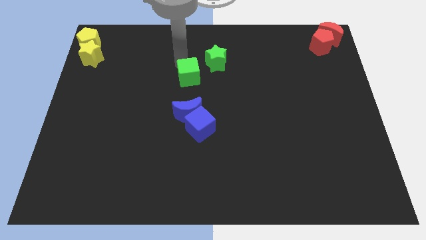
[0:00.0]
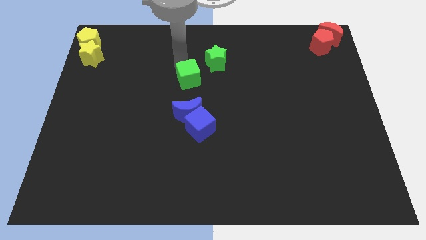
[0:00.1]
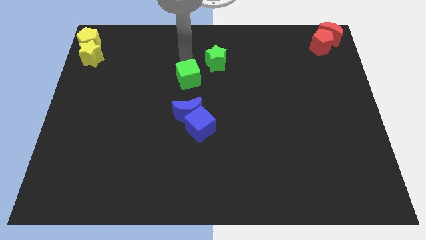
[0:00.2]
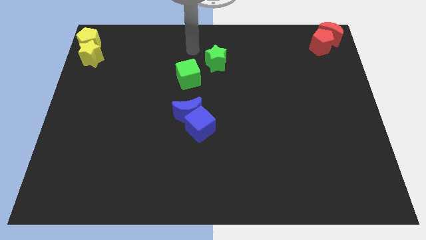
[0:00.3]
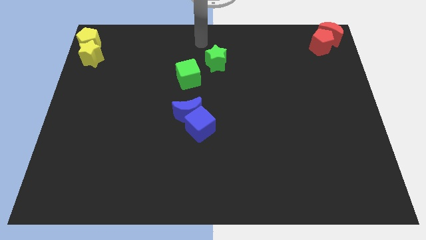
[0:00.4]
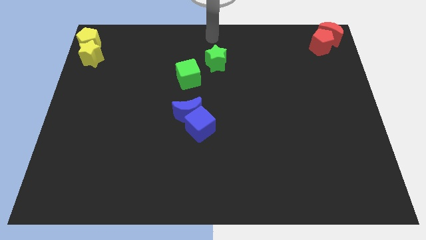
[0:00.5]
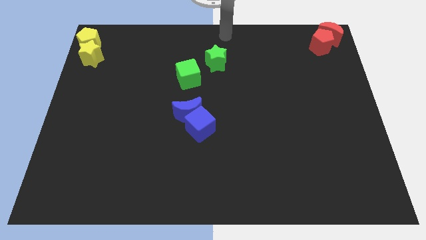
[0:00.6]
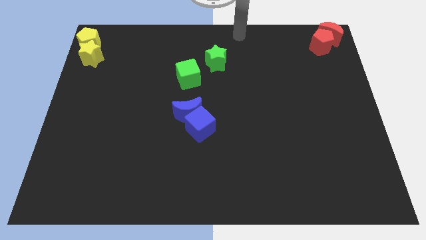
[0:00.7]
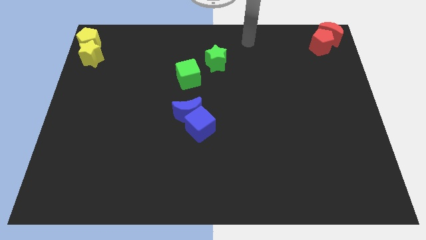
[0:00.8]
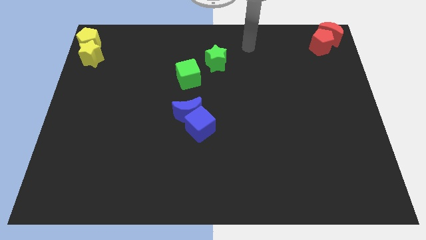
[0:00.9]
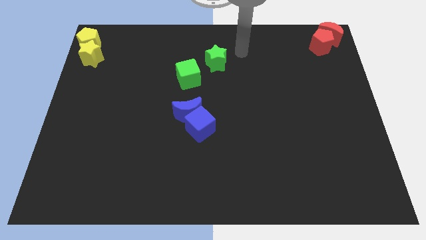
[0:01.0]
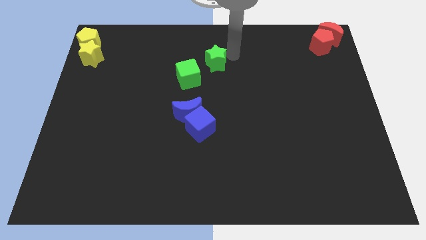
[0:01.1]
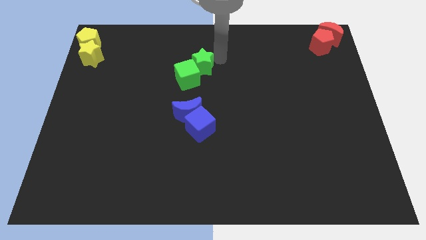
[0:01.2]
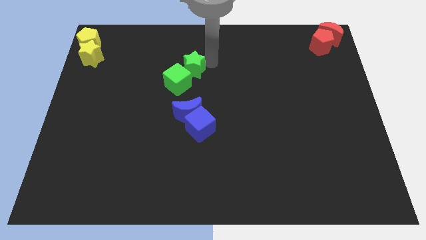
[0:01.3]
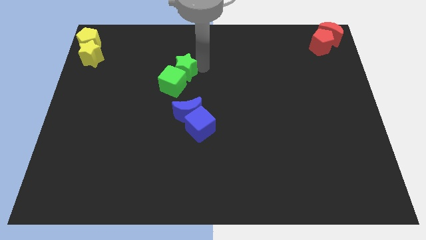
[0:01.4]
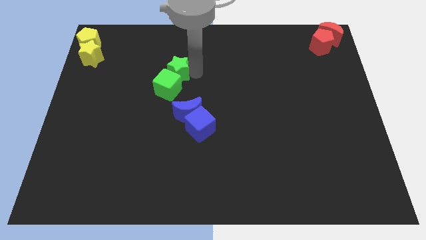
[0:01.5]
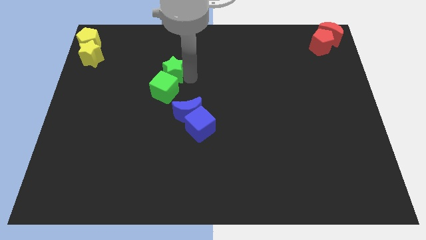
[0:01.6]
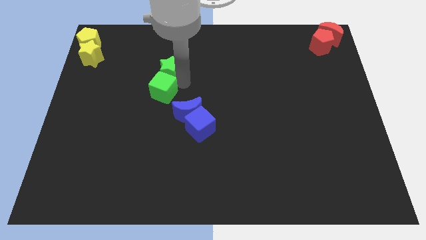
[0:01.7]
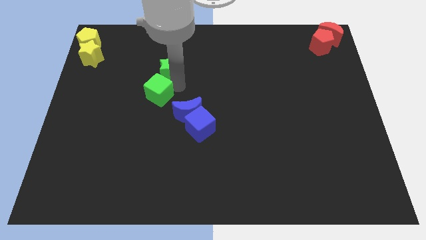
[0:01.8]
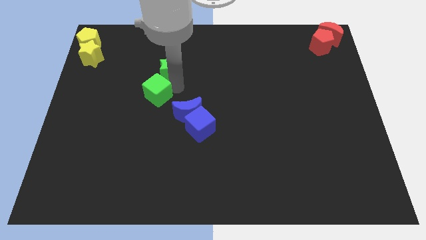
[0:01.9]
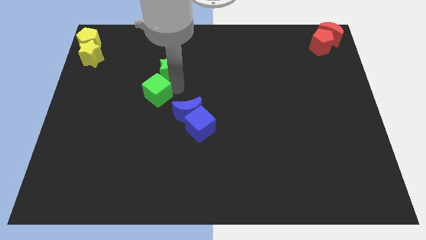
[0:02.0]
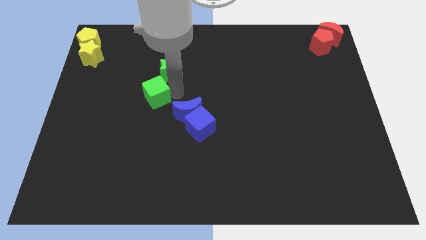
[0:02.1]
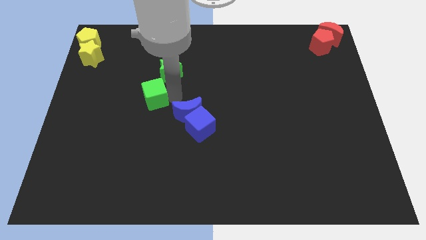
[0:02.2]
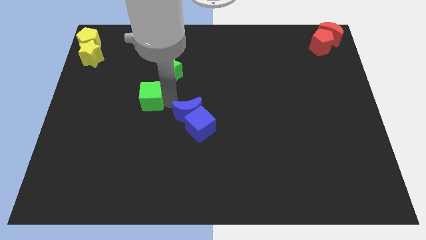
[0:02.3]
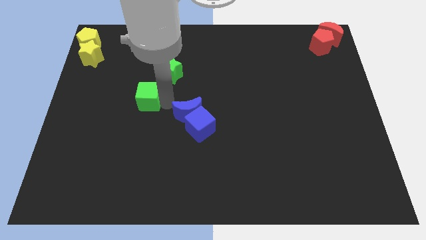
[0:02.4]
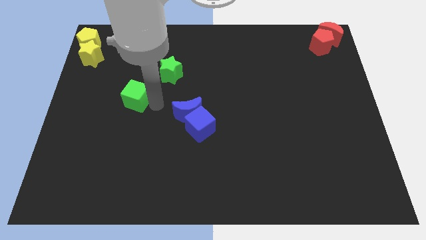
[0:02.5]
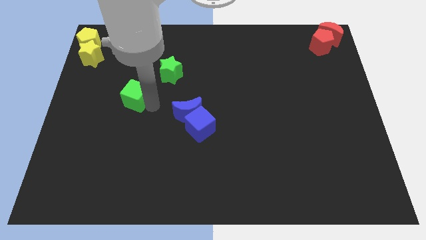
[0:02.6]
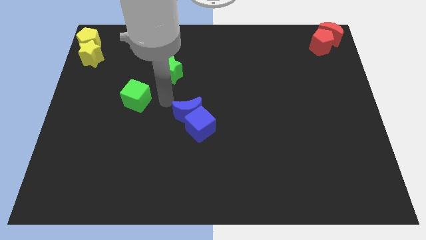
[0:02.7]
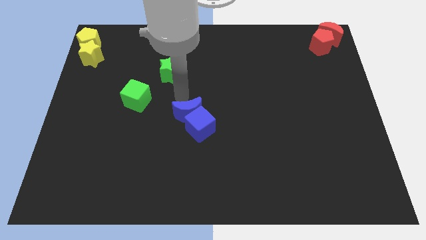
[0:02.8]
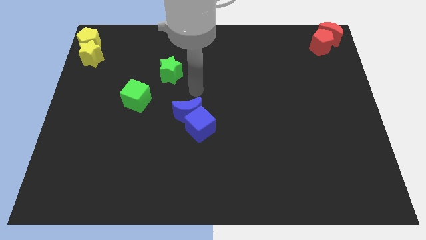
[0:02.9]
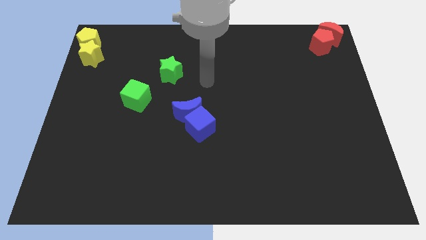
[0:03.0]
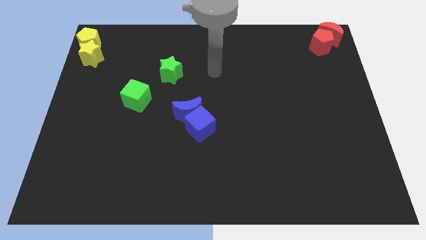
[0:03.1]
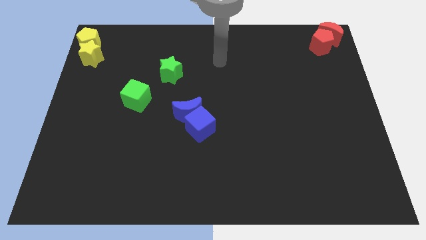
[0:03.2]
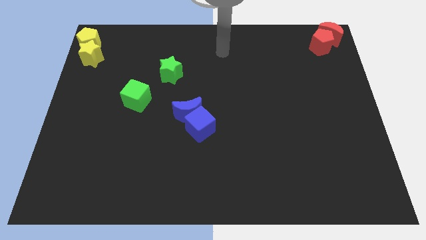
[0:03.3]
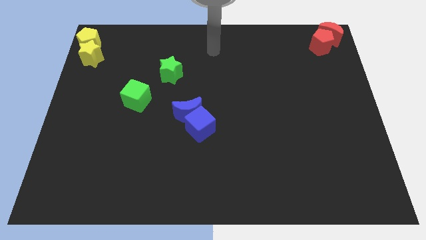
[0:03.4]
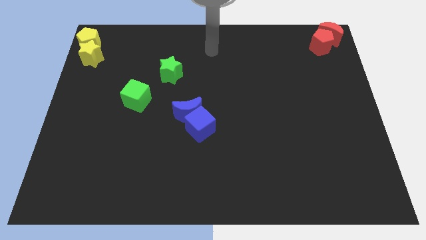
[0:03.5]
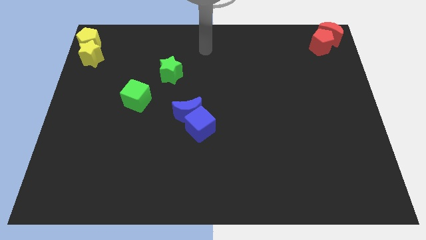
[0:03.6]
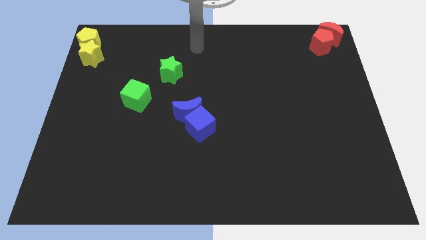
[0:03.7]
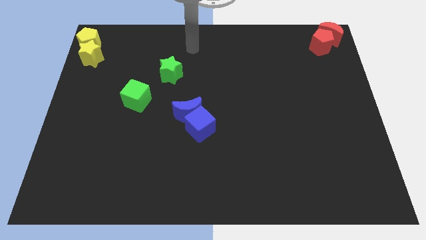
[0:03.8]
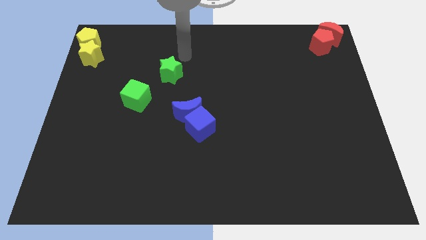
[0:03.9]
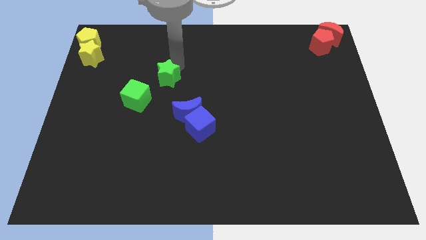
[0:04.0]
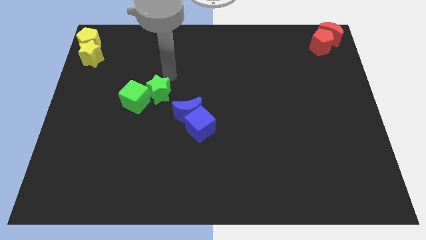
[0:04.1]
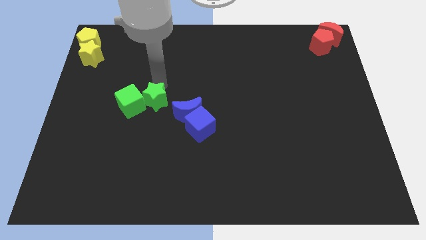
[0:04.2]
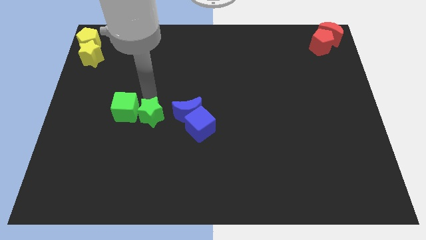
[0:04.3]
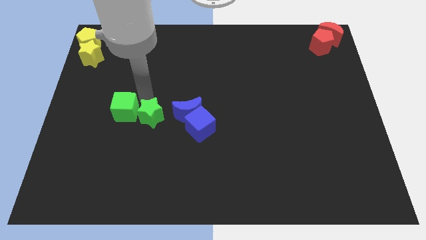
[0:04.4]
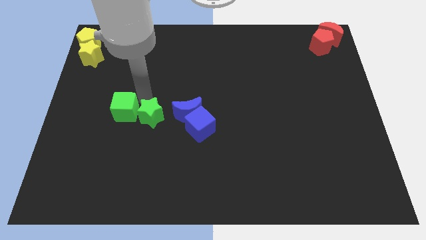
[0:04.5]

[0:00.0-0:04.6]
move the green blocks to the left of the blue crescent

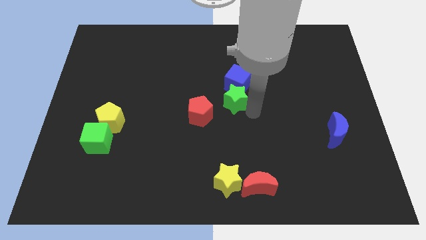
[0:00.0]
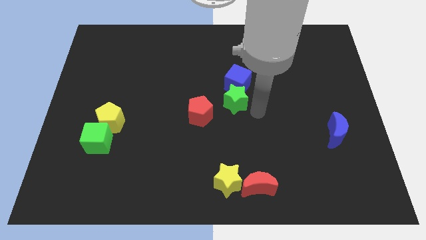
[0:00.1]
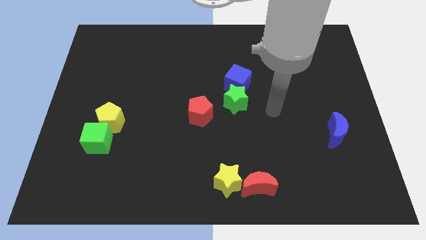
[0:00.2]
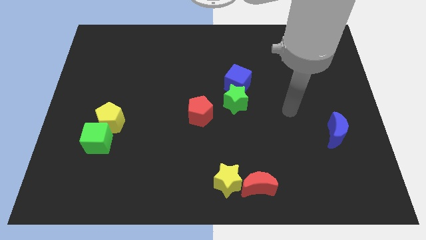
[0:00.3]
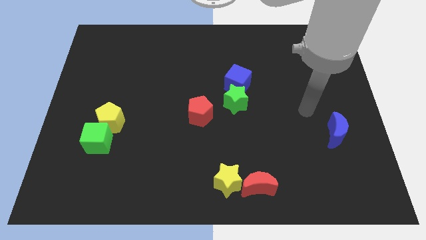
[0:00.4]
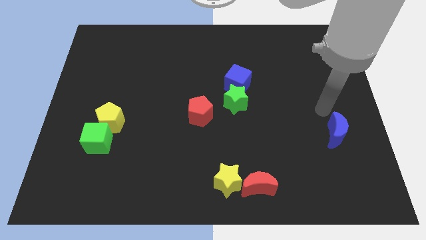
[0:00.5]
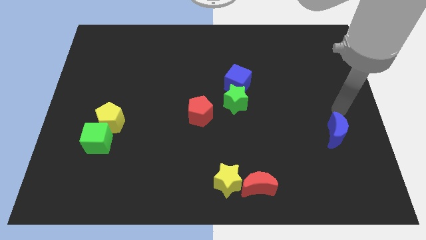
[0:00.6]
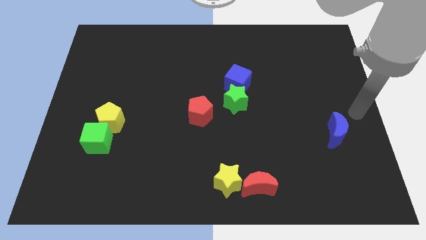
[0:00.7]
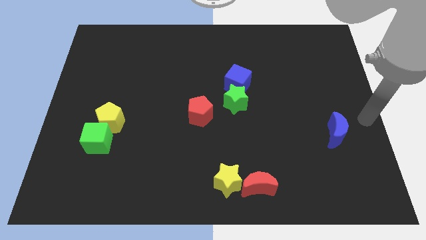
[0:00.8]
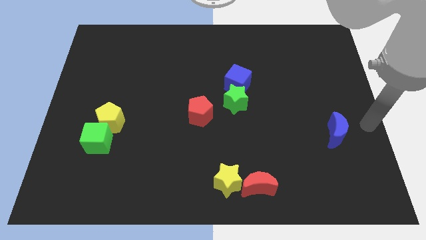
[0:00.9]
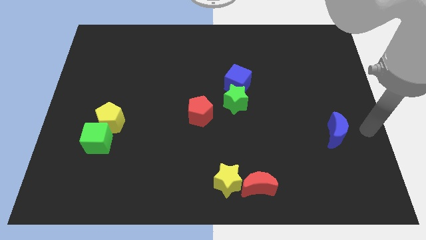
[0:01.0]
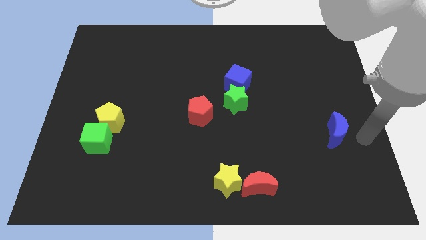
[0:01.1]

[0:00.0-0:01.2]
point your hand at the right of the blue crescent

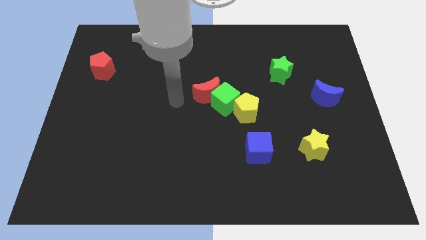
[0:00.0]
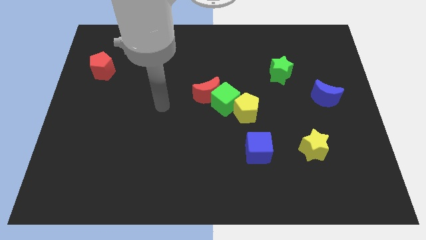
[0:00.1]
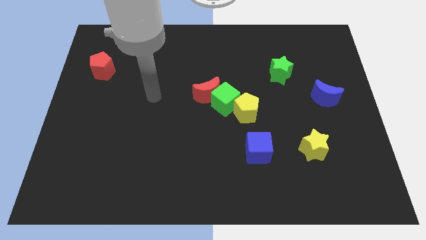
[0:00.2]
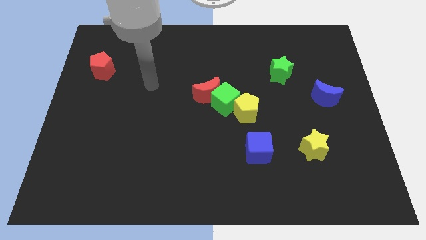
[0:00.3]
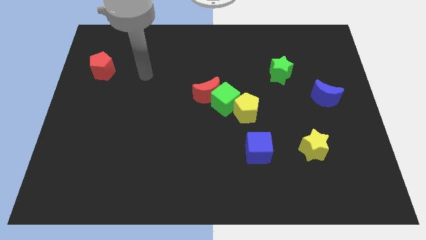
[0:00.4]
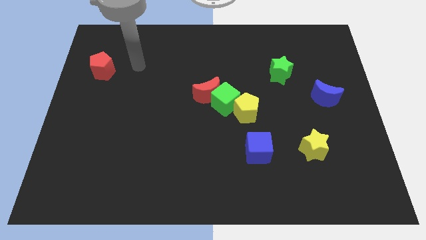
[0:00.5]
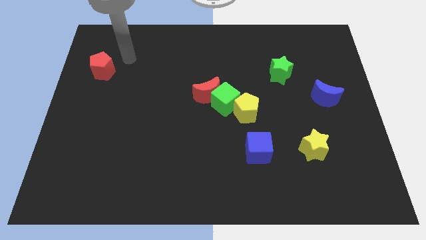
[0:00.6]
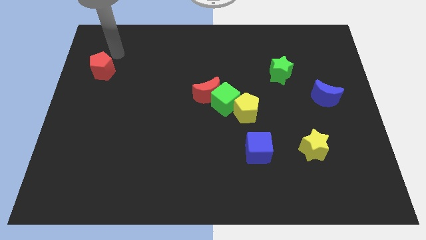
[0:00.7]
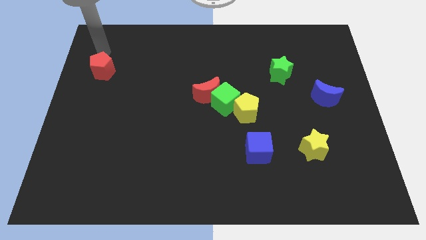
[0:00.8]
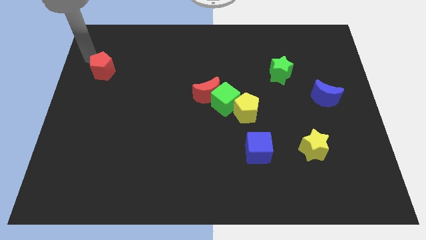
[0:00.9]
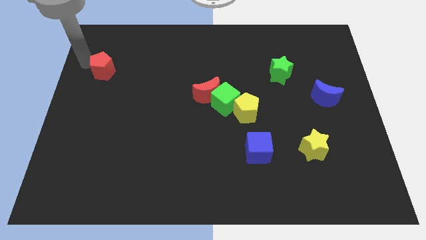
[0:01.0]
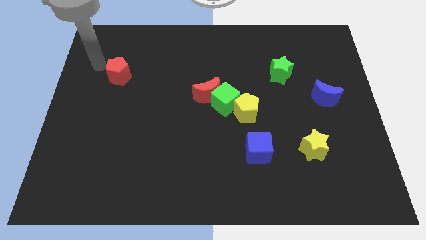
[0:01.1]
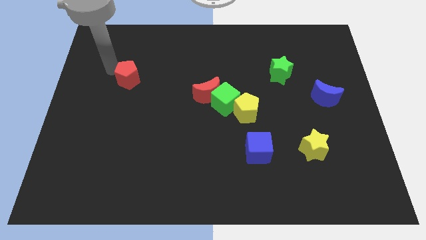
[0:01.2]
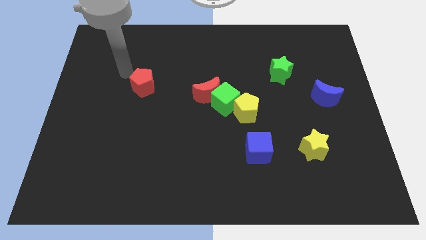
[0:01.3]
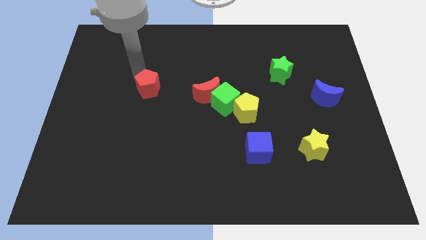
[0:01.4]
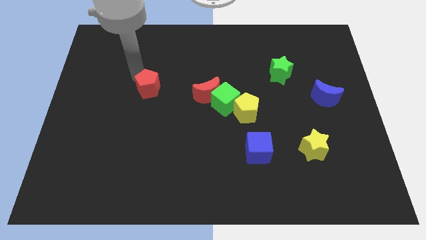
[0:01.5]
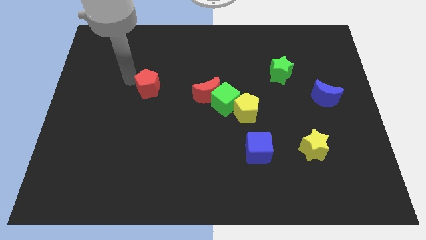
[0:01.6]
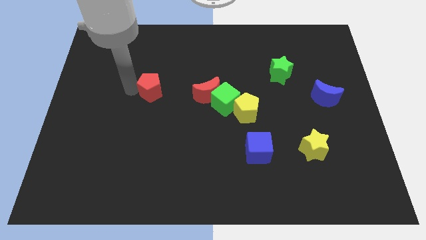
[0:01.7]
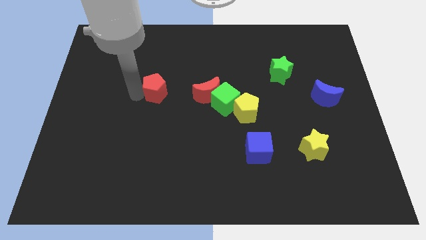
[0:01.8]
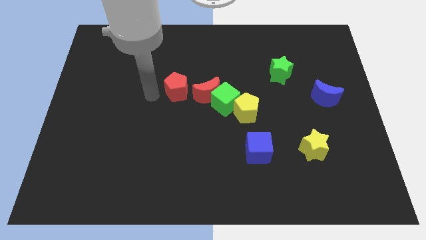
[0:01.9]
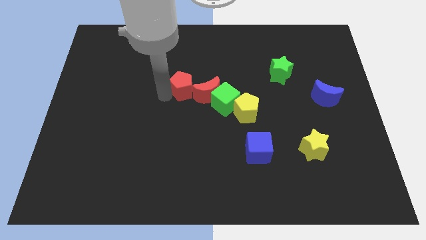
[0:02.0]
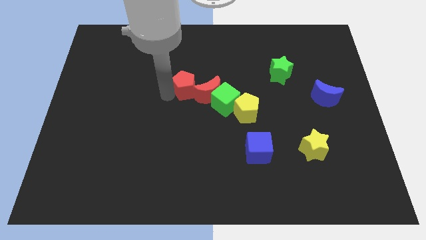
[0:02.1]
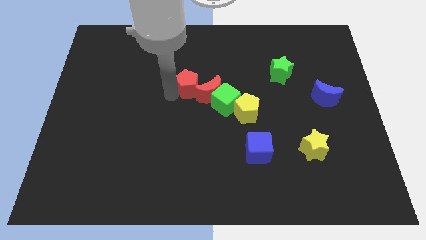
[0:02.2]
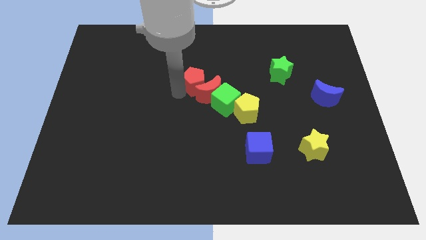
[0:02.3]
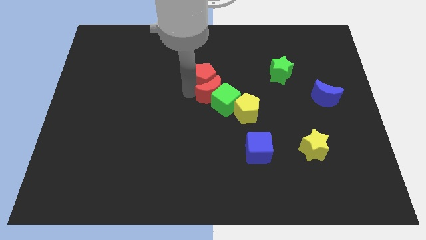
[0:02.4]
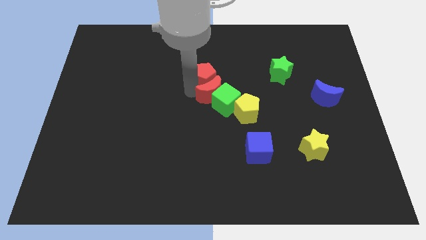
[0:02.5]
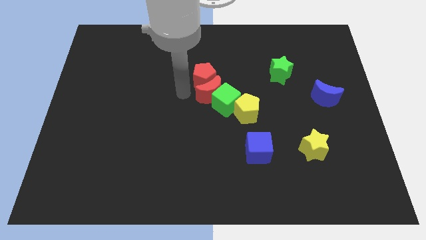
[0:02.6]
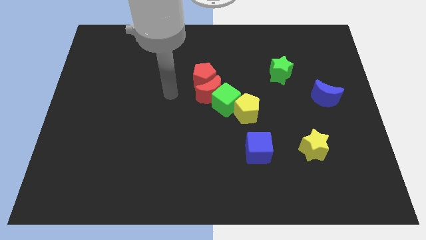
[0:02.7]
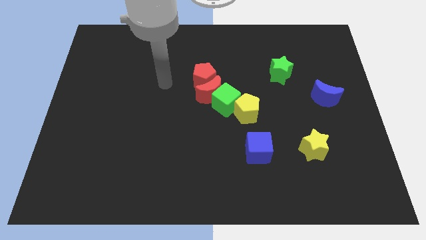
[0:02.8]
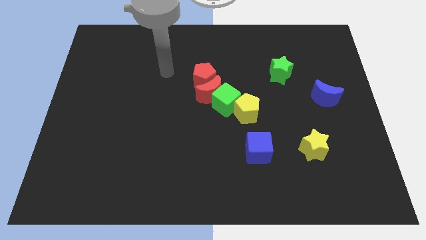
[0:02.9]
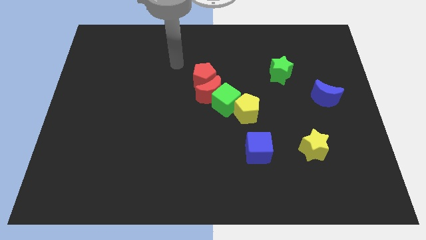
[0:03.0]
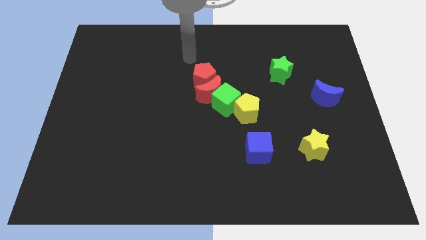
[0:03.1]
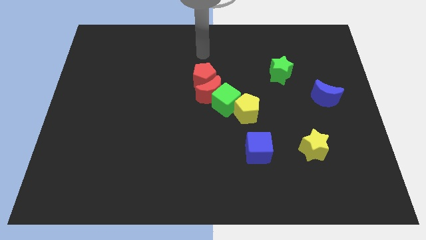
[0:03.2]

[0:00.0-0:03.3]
push the red pentagon at the top side of the red crescent

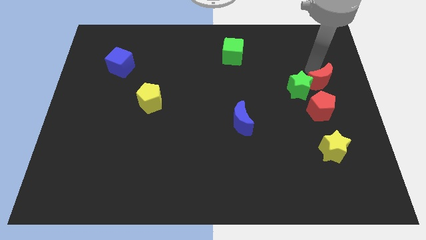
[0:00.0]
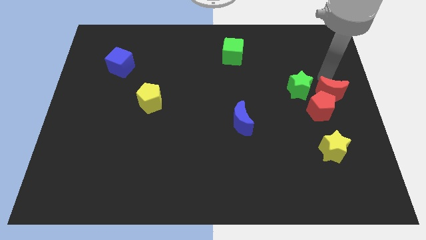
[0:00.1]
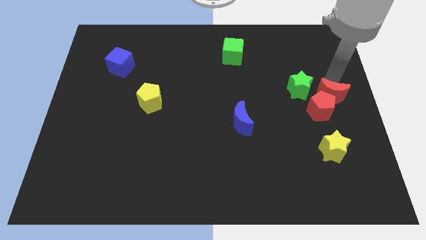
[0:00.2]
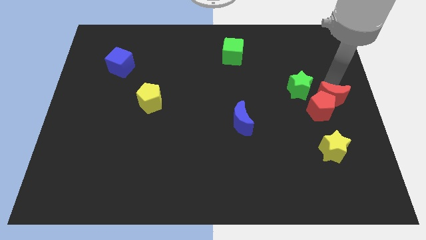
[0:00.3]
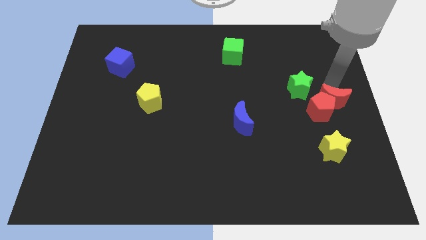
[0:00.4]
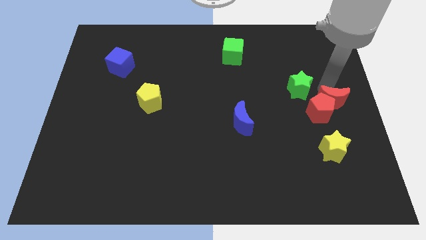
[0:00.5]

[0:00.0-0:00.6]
place the red crescent above the red pentagon
